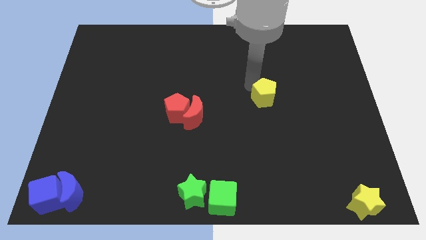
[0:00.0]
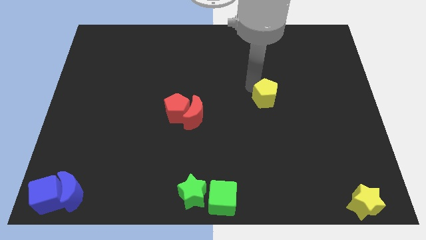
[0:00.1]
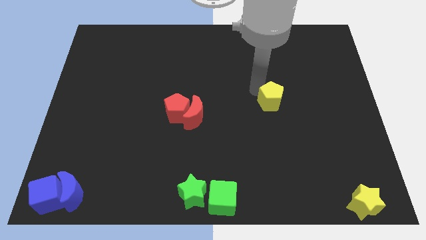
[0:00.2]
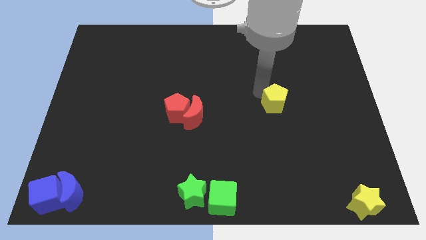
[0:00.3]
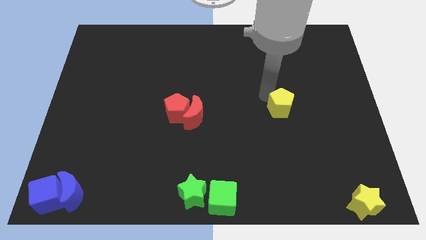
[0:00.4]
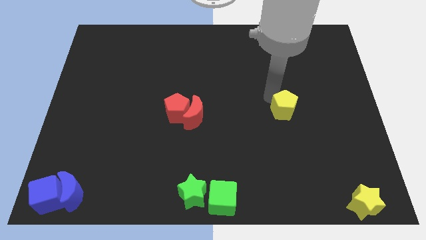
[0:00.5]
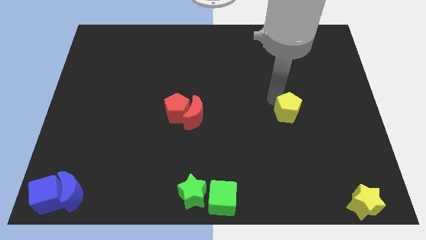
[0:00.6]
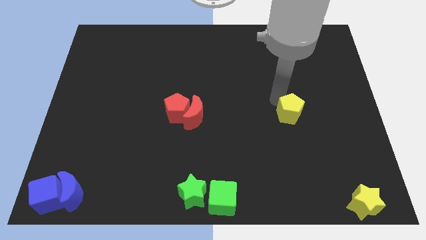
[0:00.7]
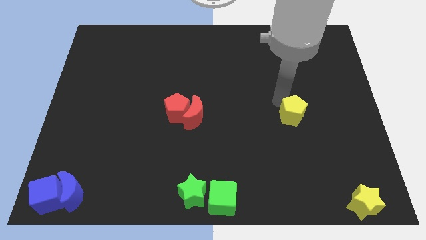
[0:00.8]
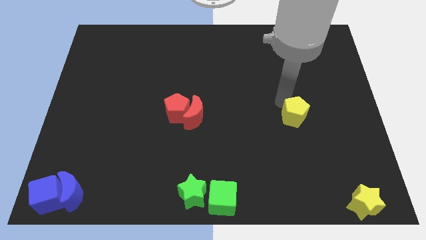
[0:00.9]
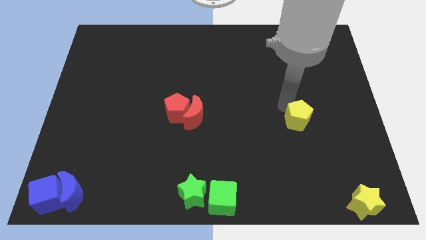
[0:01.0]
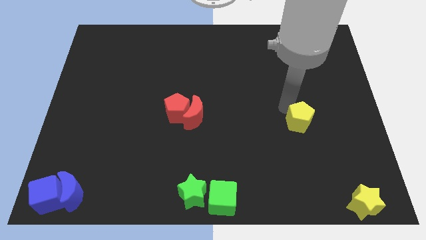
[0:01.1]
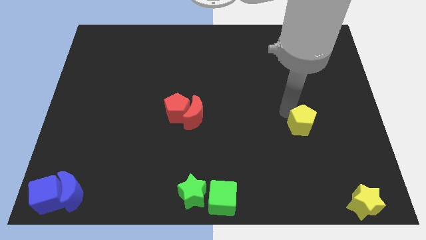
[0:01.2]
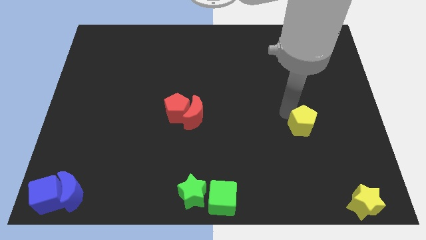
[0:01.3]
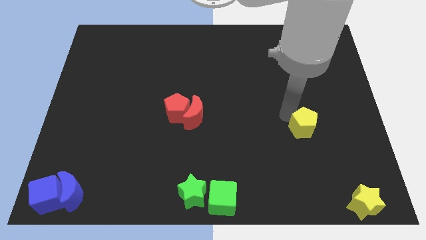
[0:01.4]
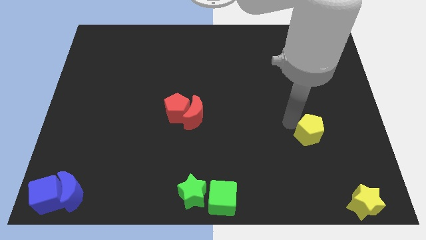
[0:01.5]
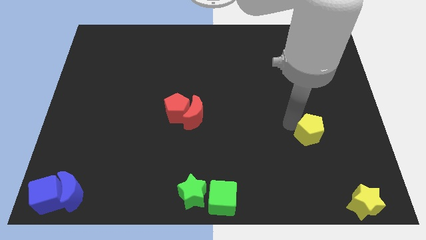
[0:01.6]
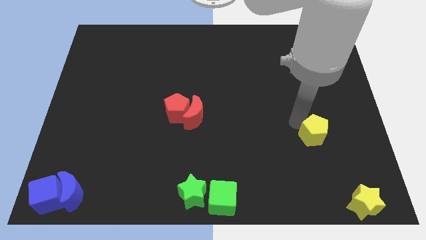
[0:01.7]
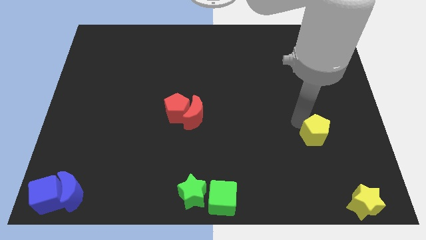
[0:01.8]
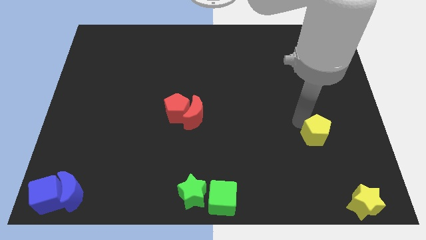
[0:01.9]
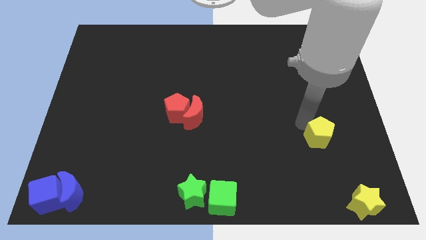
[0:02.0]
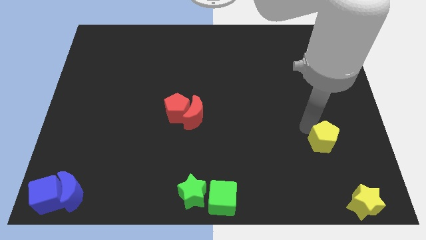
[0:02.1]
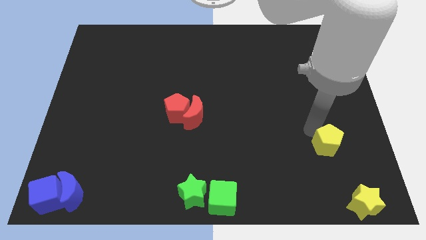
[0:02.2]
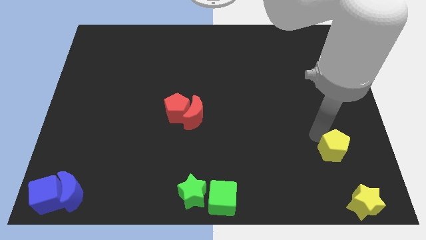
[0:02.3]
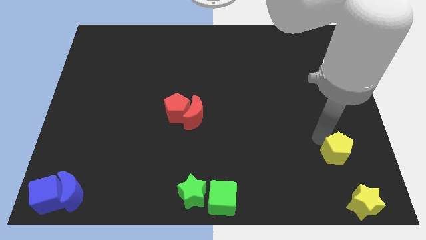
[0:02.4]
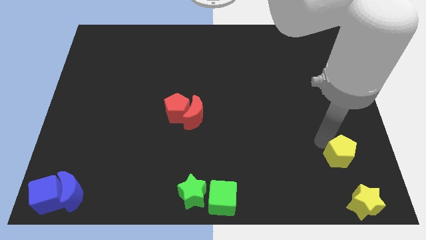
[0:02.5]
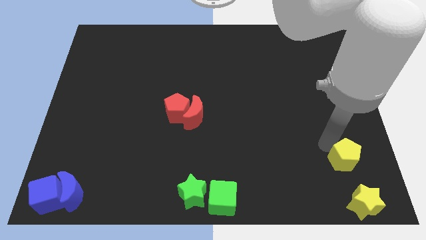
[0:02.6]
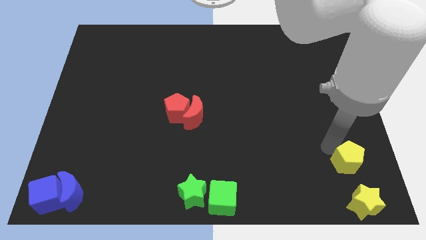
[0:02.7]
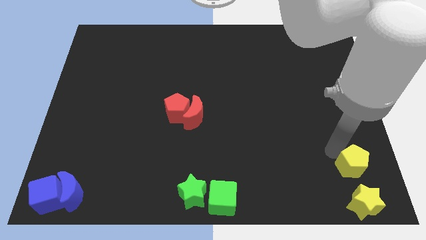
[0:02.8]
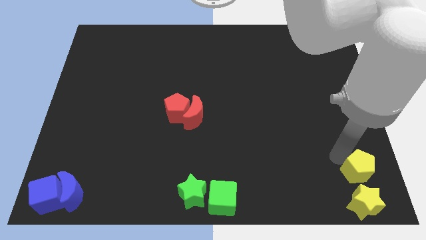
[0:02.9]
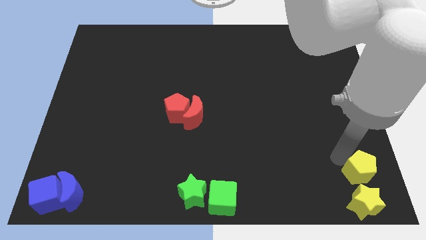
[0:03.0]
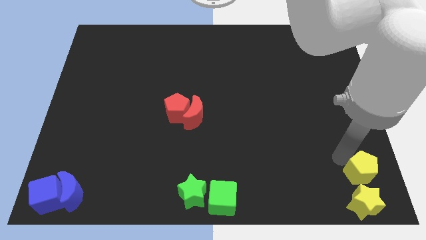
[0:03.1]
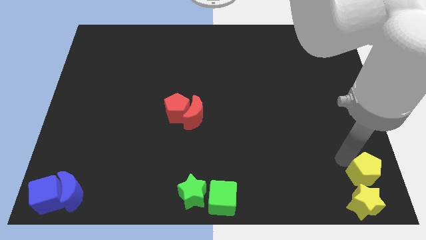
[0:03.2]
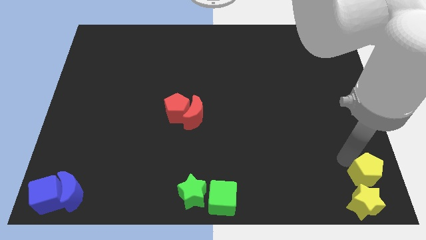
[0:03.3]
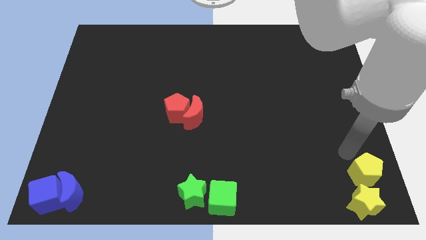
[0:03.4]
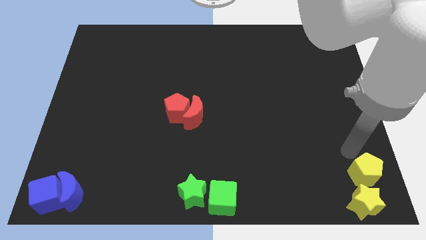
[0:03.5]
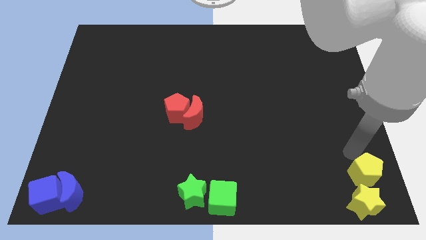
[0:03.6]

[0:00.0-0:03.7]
push yellow pentagon above yellow star

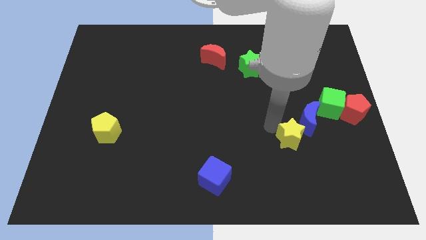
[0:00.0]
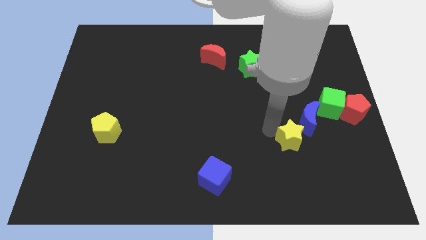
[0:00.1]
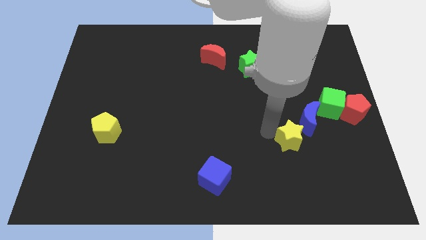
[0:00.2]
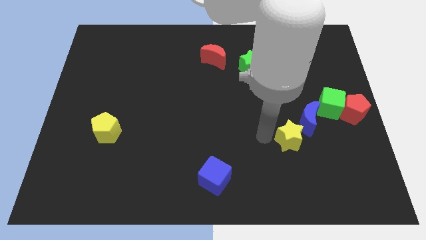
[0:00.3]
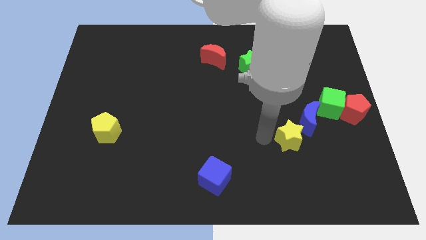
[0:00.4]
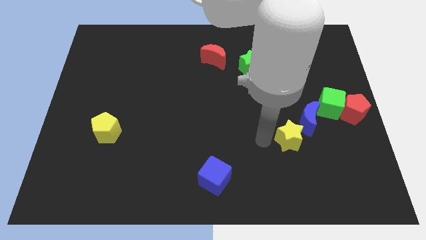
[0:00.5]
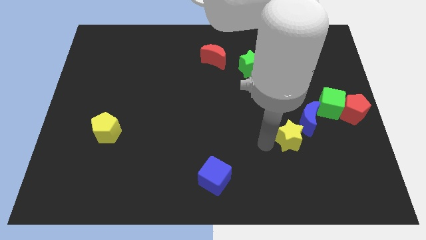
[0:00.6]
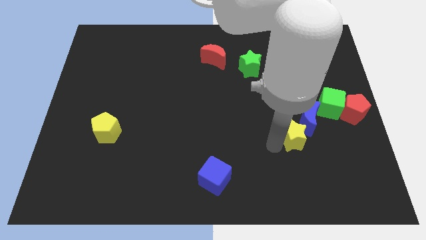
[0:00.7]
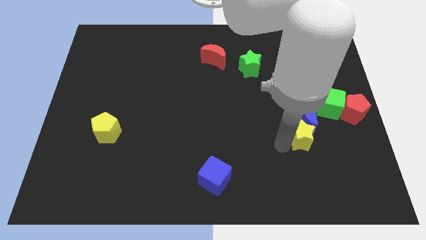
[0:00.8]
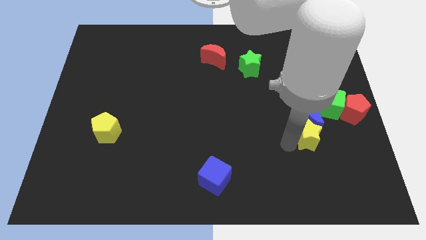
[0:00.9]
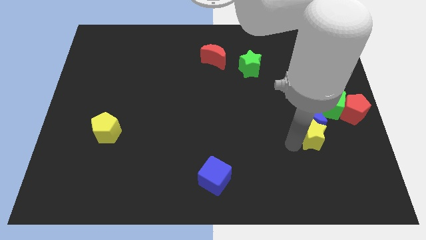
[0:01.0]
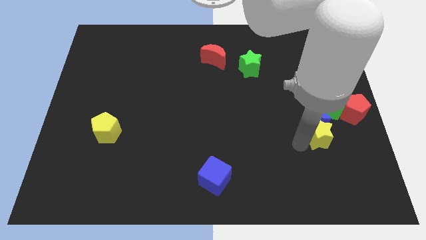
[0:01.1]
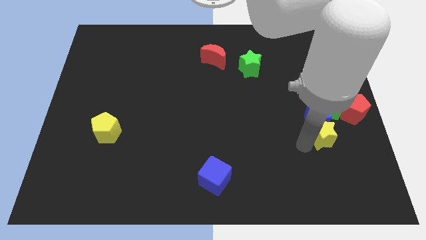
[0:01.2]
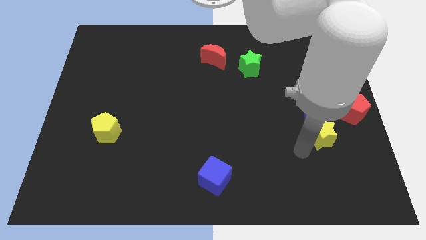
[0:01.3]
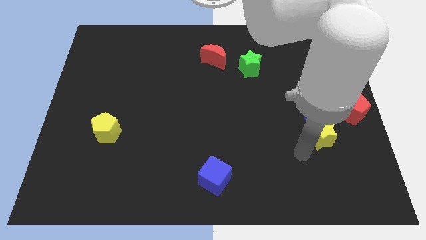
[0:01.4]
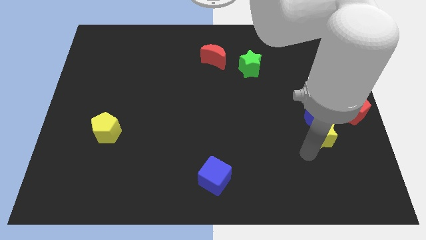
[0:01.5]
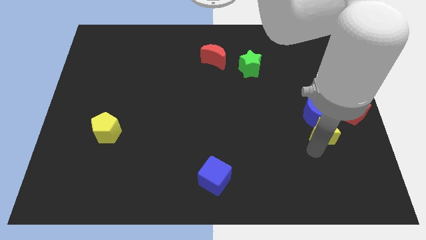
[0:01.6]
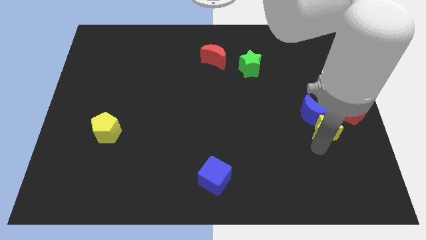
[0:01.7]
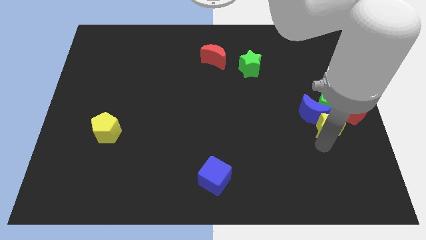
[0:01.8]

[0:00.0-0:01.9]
push the yellow star into the blue moon

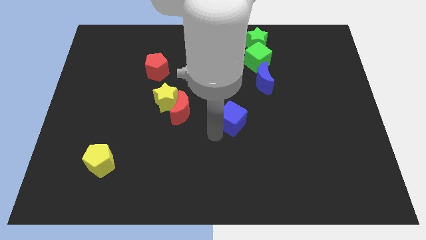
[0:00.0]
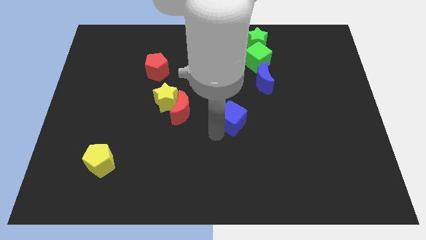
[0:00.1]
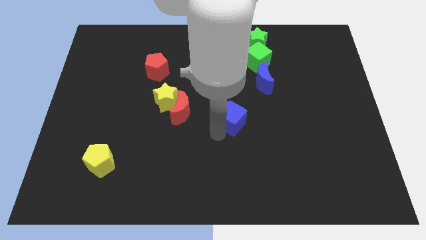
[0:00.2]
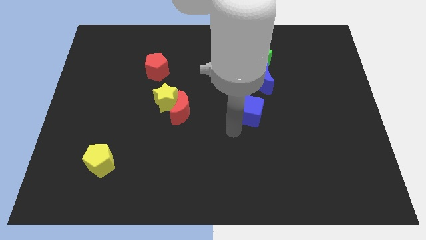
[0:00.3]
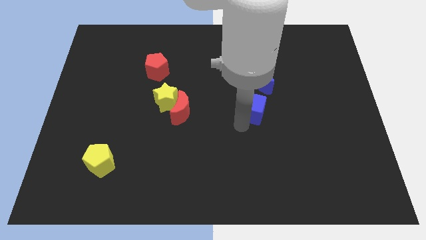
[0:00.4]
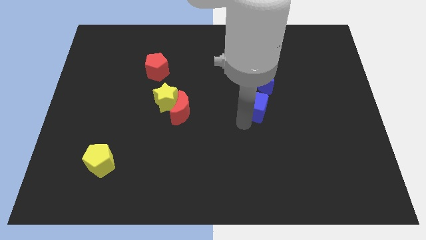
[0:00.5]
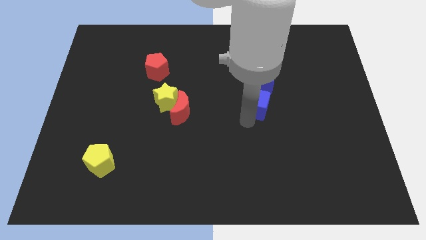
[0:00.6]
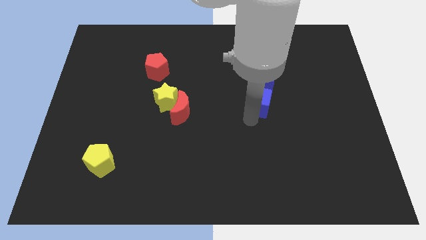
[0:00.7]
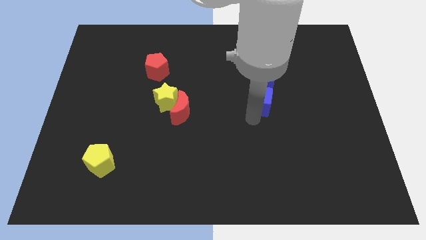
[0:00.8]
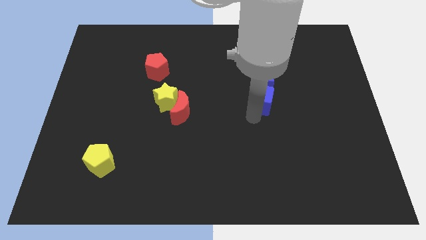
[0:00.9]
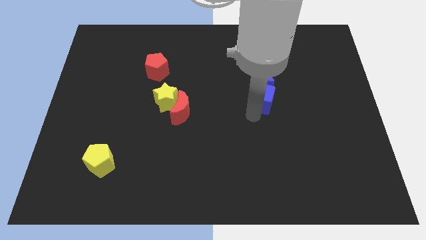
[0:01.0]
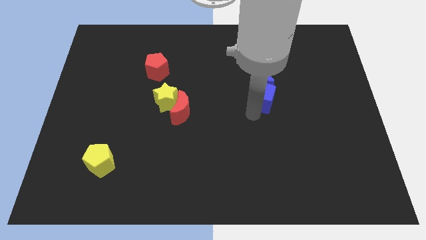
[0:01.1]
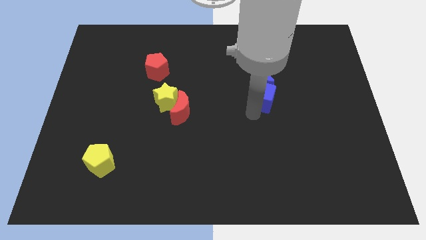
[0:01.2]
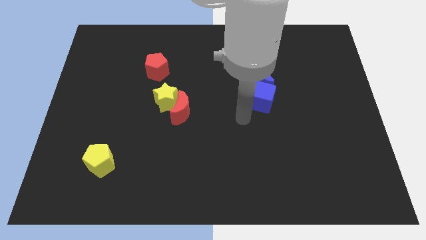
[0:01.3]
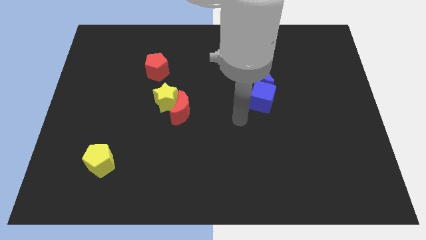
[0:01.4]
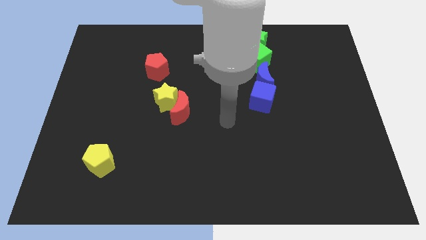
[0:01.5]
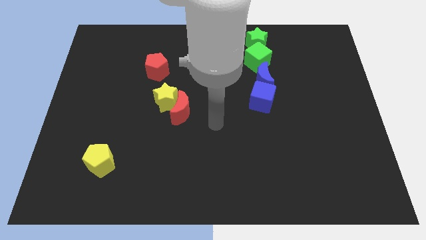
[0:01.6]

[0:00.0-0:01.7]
slide the blue cube to the bottom of the blue moon

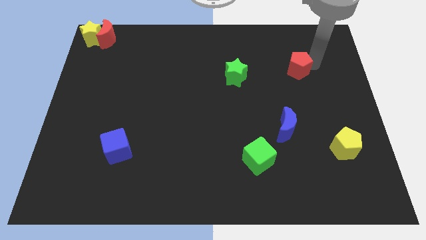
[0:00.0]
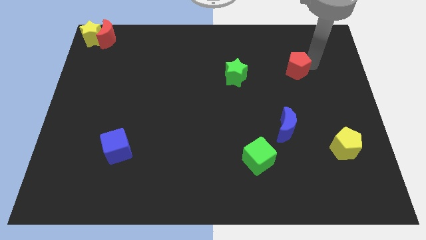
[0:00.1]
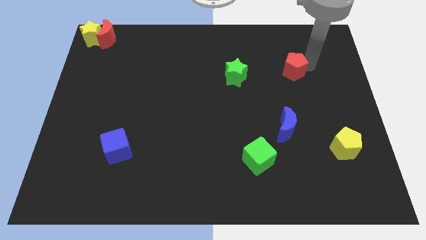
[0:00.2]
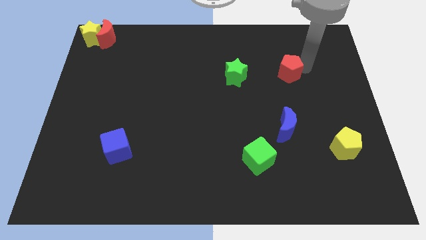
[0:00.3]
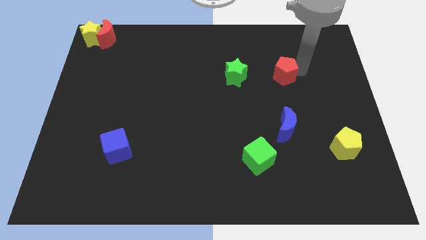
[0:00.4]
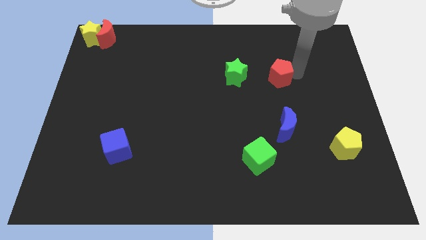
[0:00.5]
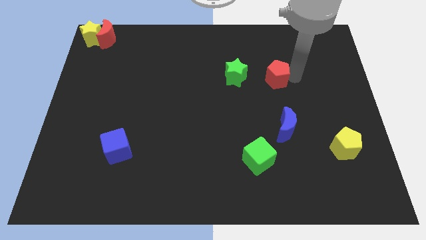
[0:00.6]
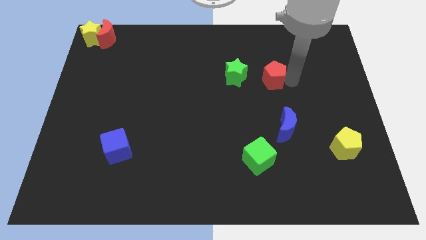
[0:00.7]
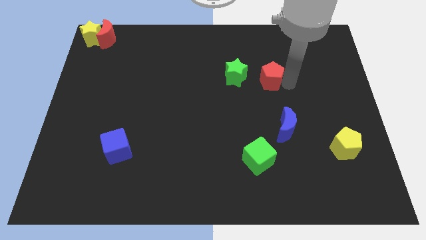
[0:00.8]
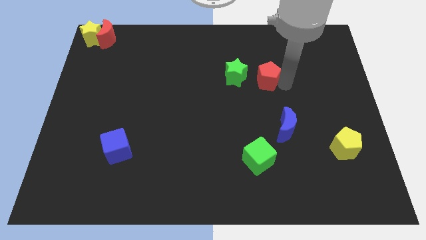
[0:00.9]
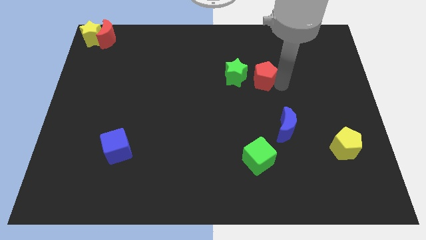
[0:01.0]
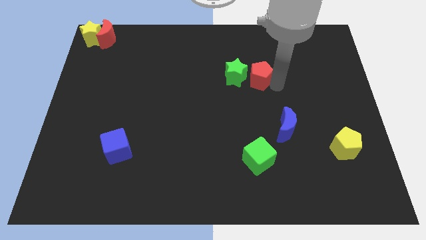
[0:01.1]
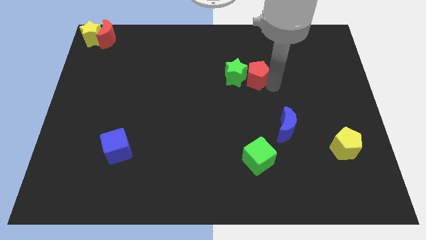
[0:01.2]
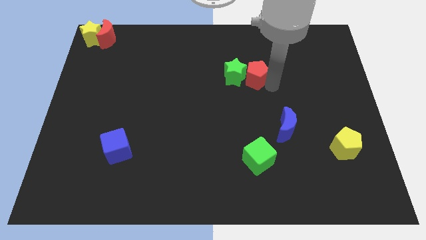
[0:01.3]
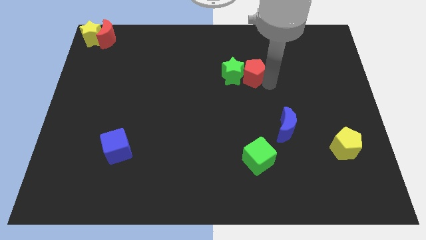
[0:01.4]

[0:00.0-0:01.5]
move the red pentagon close to green star
